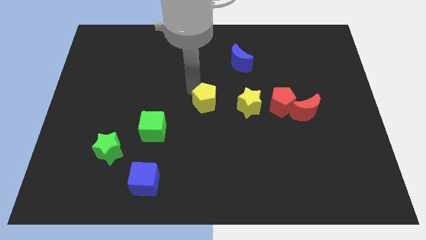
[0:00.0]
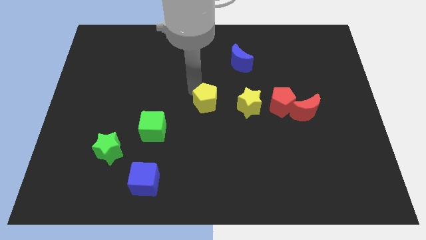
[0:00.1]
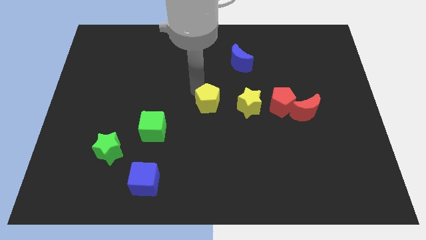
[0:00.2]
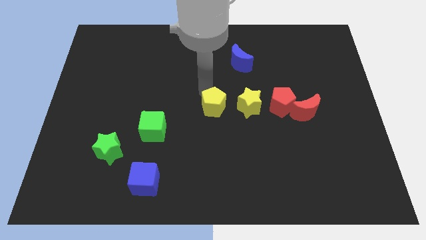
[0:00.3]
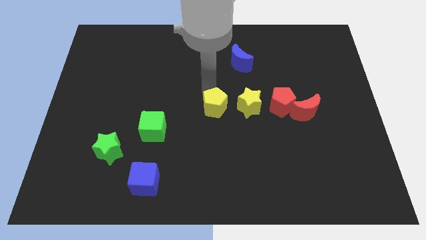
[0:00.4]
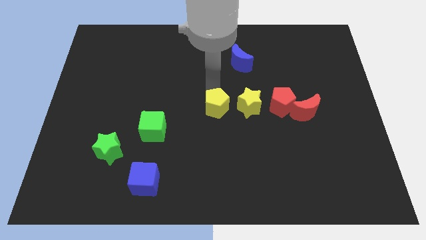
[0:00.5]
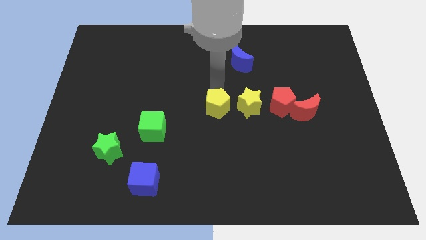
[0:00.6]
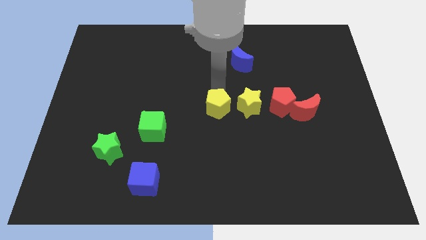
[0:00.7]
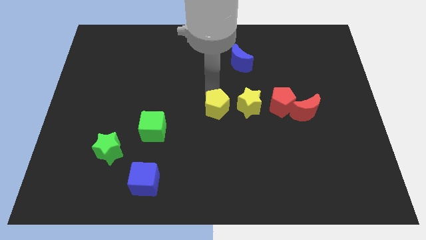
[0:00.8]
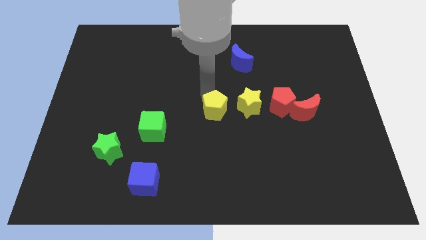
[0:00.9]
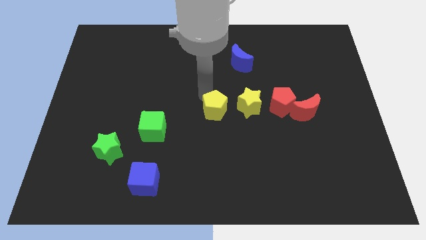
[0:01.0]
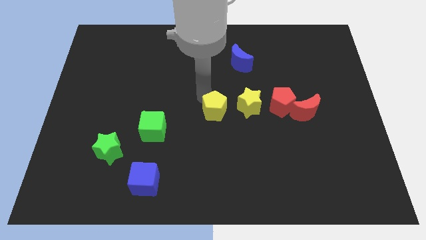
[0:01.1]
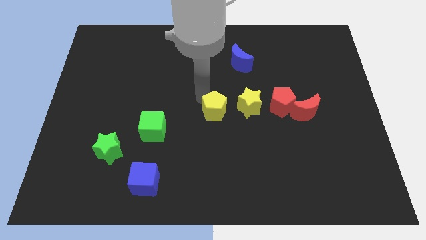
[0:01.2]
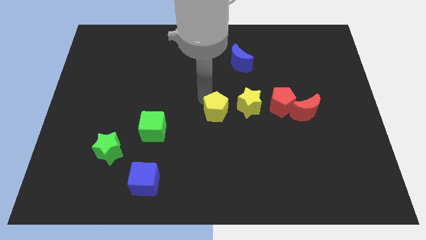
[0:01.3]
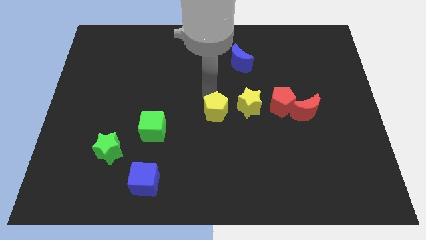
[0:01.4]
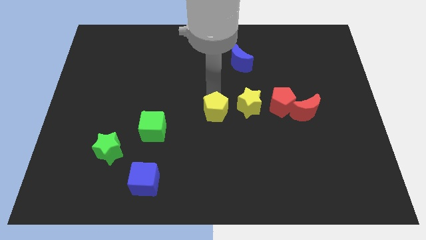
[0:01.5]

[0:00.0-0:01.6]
move yellow pentagon to the left of yellow star

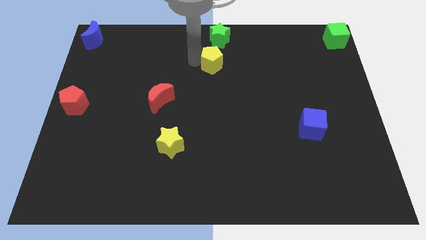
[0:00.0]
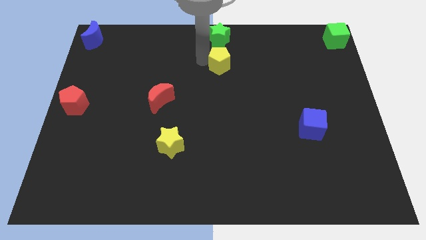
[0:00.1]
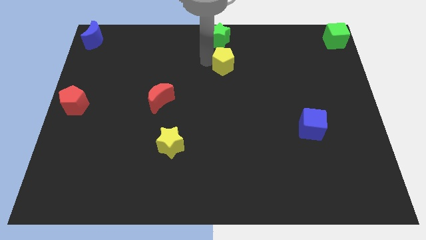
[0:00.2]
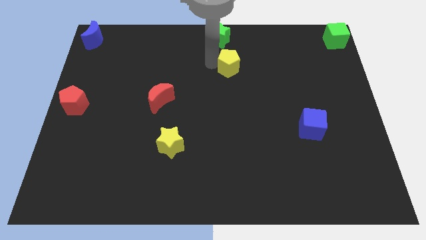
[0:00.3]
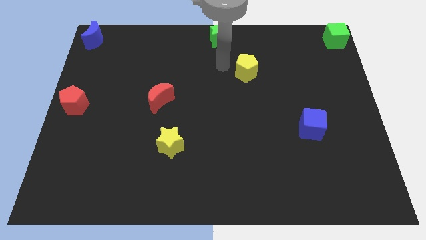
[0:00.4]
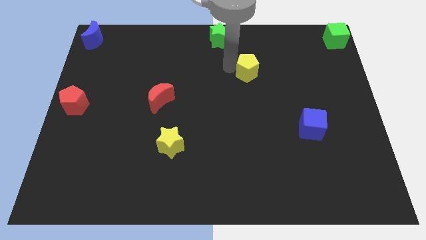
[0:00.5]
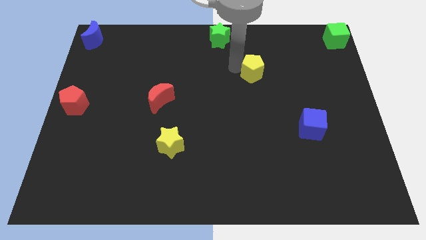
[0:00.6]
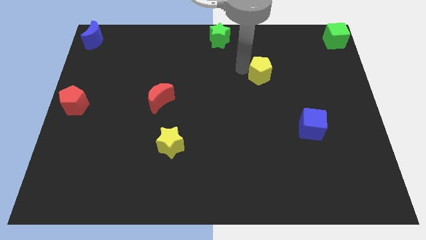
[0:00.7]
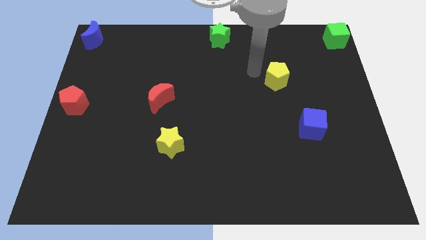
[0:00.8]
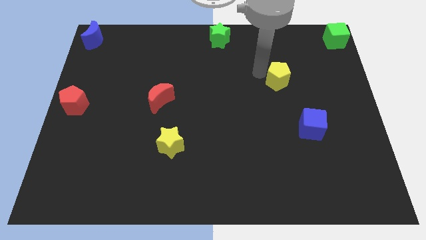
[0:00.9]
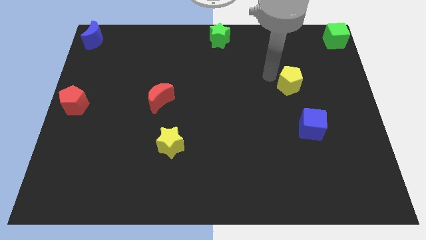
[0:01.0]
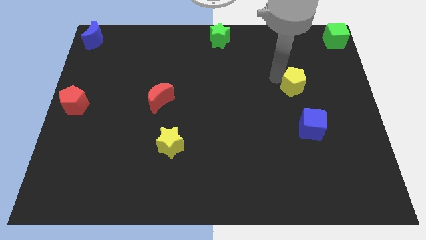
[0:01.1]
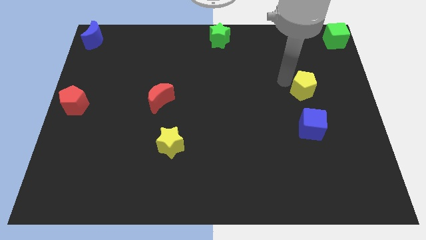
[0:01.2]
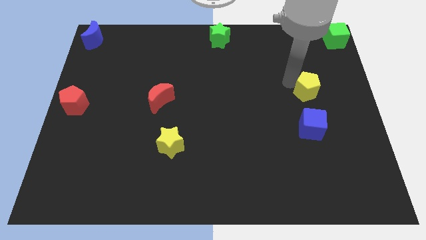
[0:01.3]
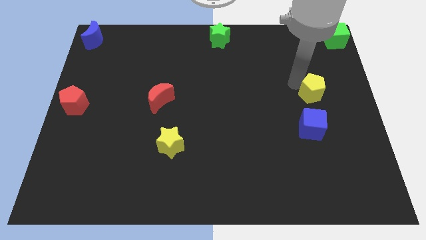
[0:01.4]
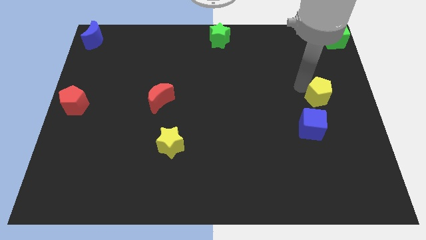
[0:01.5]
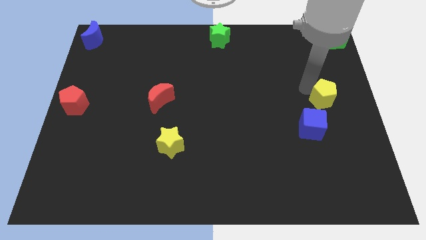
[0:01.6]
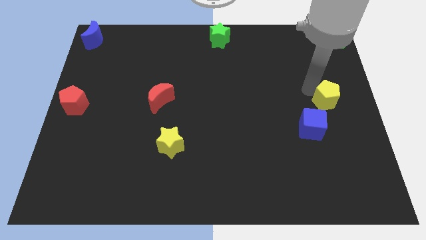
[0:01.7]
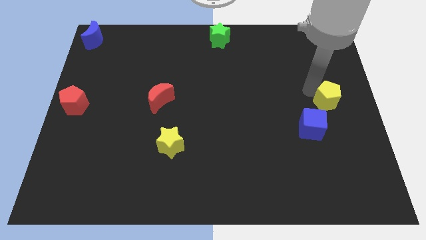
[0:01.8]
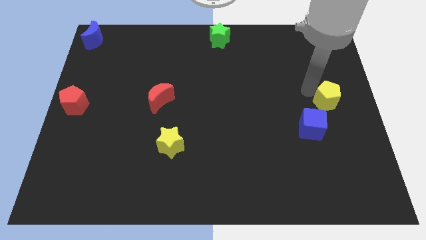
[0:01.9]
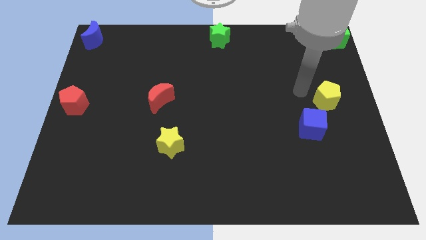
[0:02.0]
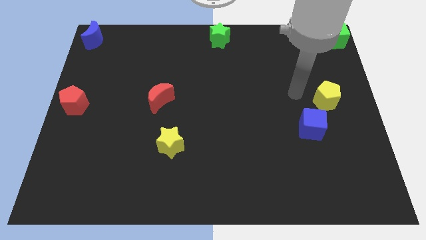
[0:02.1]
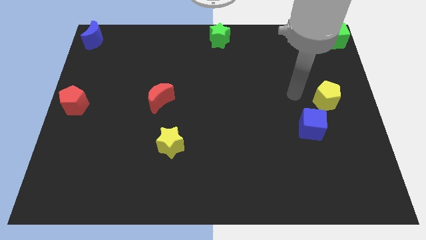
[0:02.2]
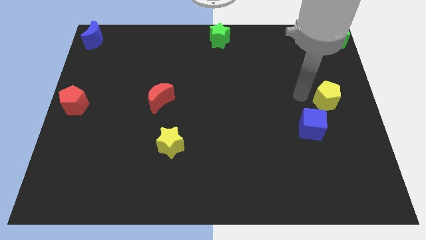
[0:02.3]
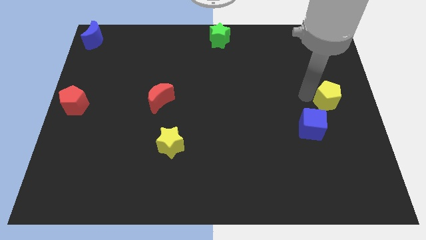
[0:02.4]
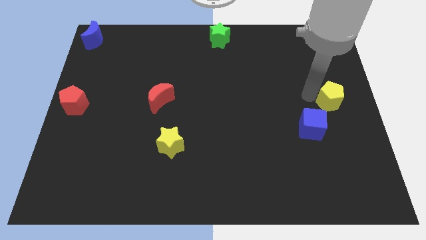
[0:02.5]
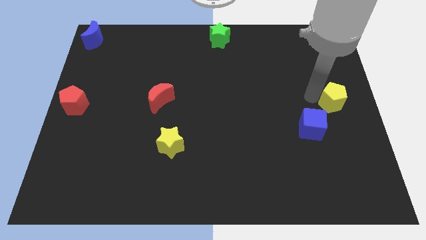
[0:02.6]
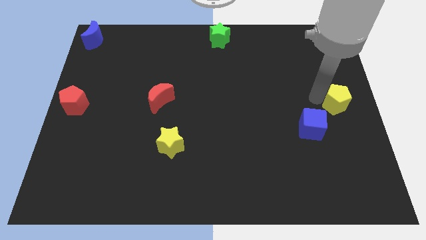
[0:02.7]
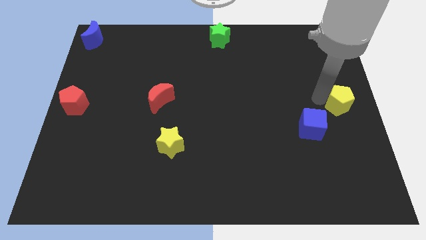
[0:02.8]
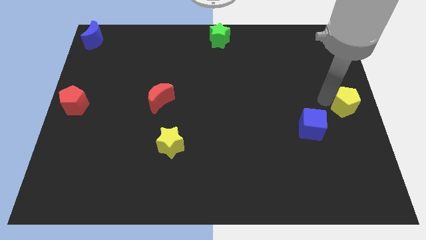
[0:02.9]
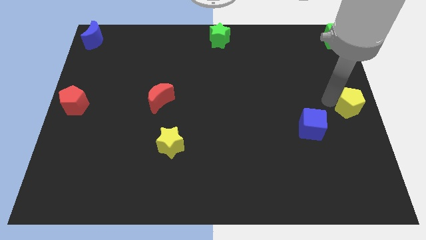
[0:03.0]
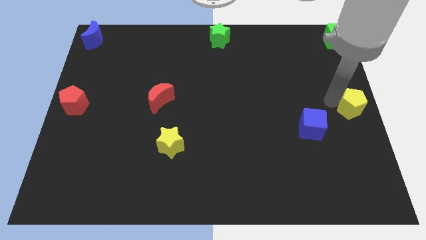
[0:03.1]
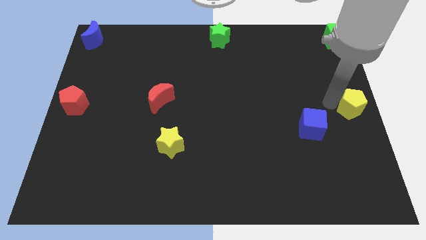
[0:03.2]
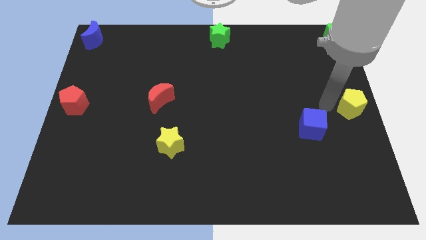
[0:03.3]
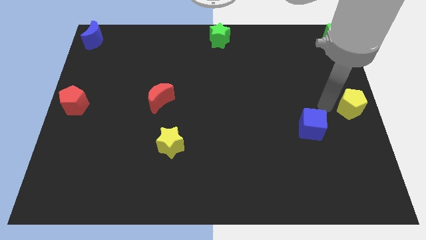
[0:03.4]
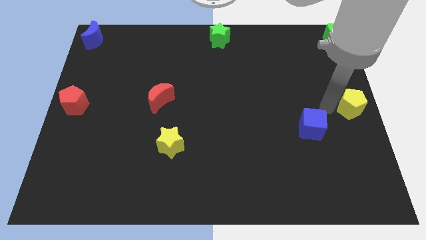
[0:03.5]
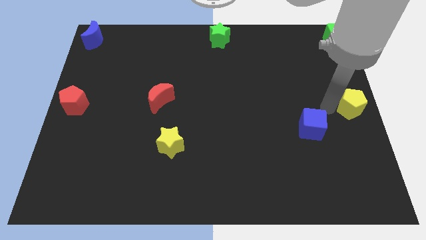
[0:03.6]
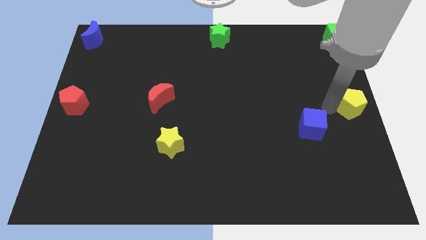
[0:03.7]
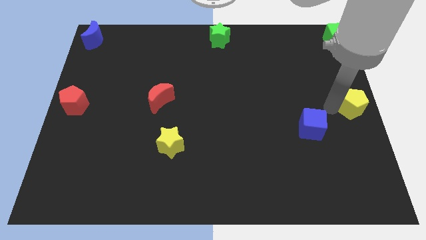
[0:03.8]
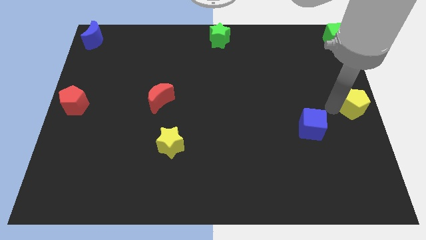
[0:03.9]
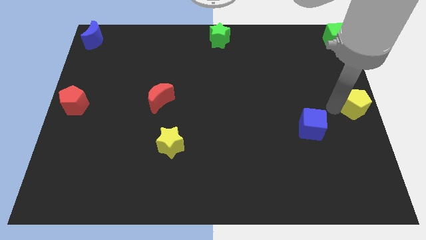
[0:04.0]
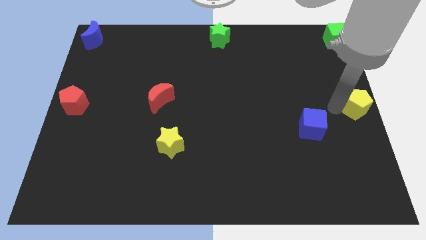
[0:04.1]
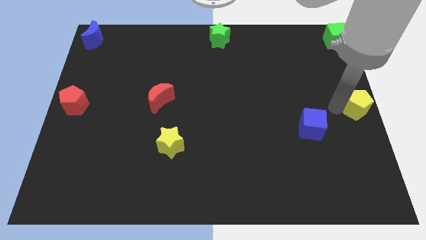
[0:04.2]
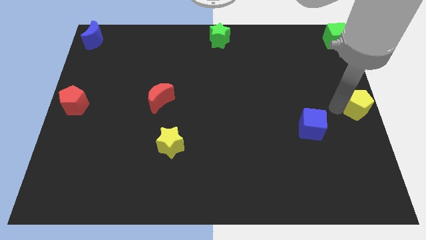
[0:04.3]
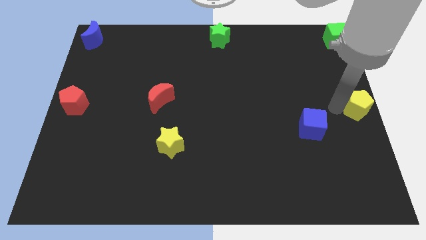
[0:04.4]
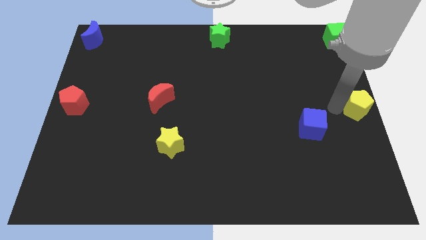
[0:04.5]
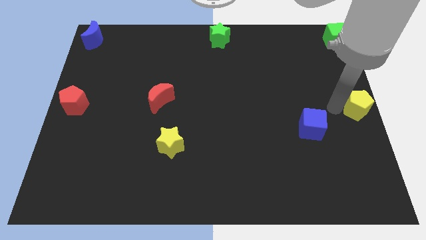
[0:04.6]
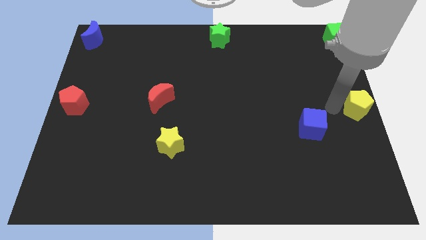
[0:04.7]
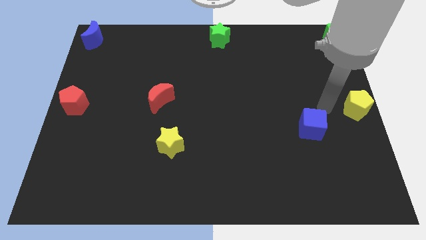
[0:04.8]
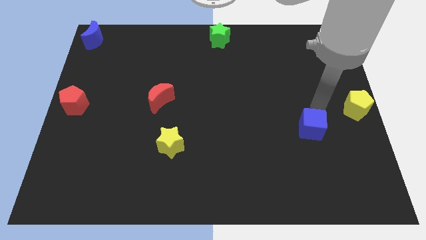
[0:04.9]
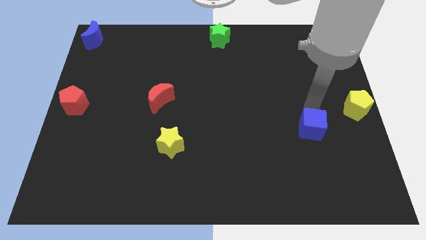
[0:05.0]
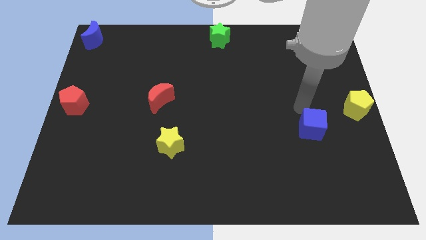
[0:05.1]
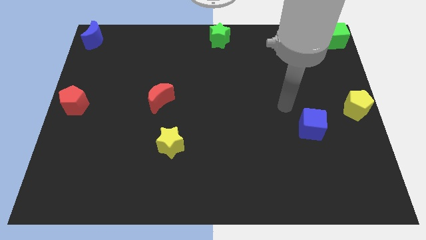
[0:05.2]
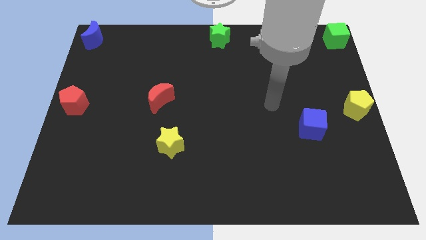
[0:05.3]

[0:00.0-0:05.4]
move yellow pentagon to the center right

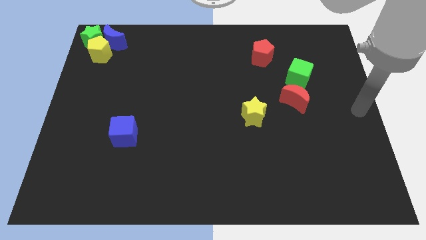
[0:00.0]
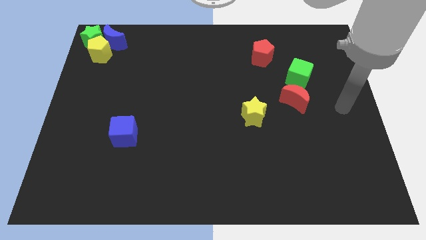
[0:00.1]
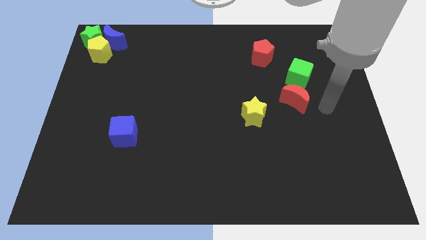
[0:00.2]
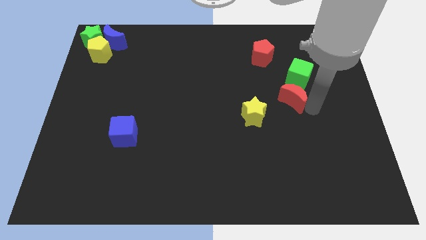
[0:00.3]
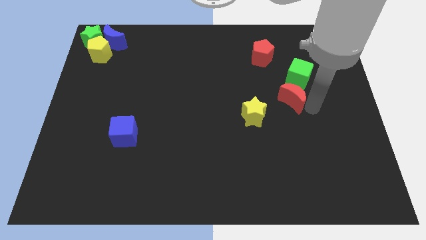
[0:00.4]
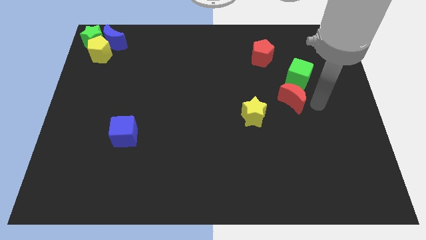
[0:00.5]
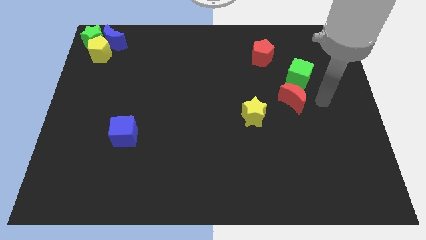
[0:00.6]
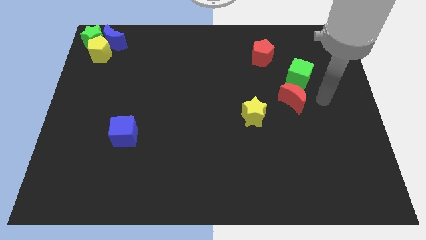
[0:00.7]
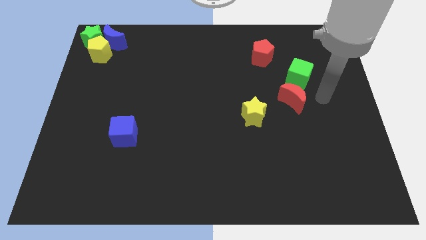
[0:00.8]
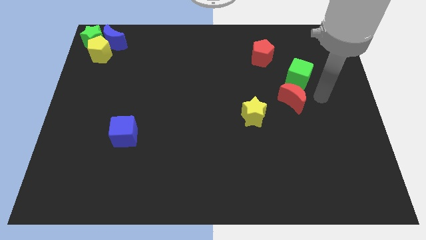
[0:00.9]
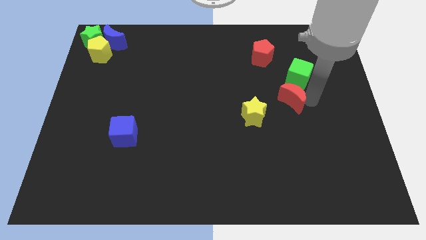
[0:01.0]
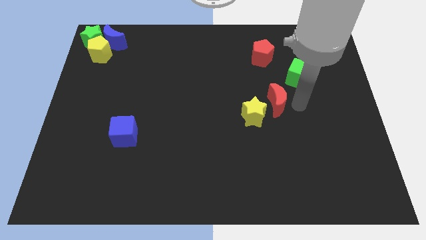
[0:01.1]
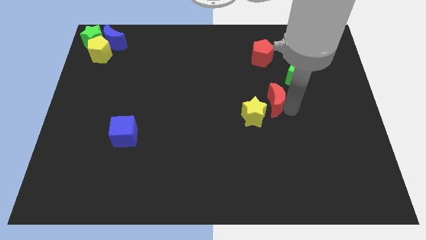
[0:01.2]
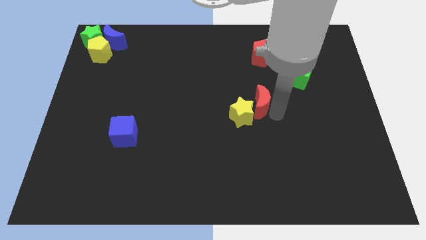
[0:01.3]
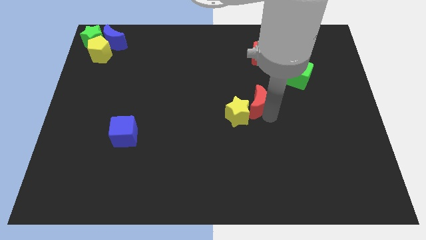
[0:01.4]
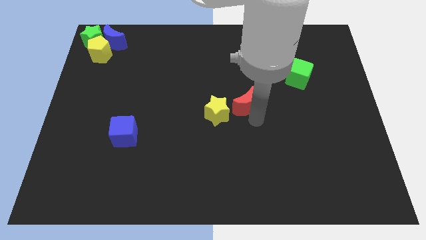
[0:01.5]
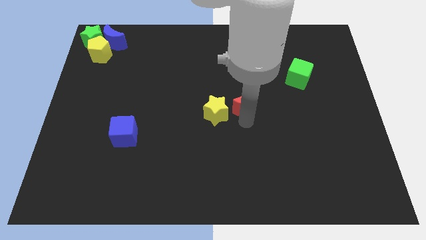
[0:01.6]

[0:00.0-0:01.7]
move red crescent into the yellow star
